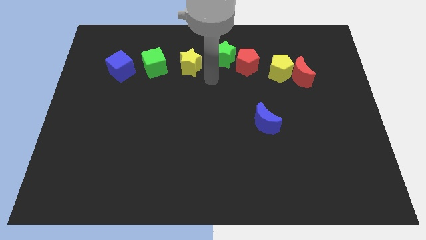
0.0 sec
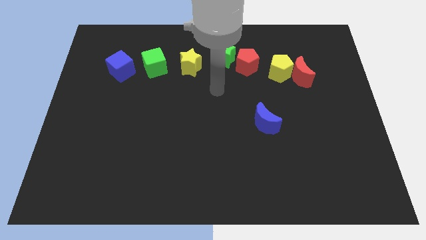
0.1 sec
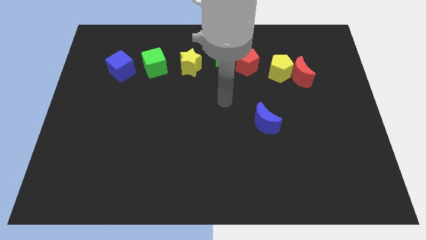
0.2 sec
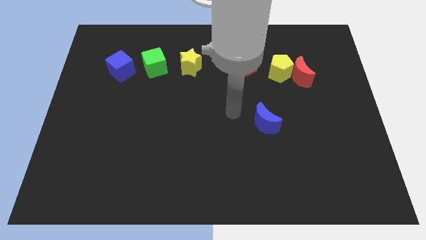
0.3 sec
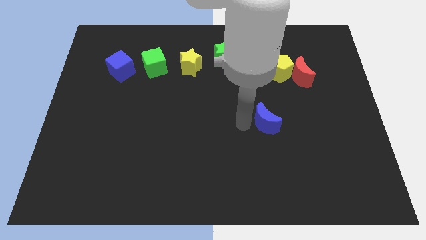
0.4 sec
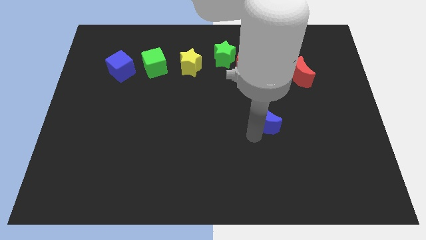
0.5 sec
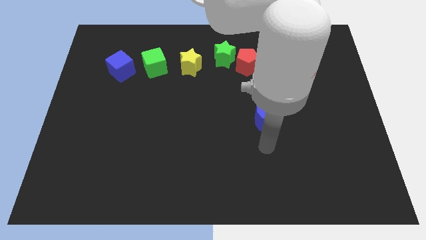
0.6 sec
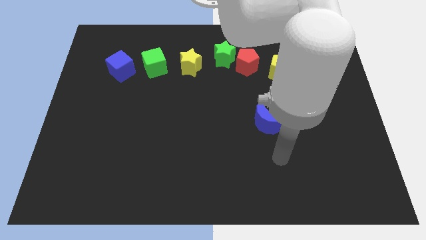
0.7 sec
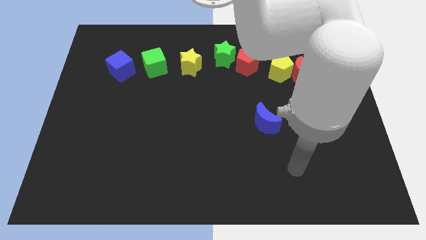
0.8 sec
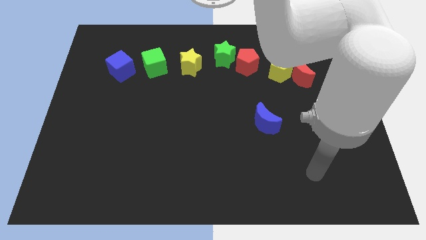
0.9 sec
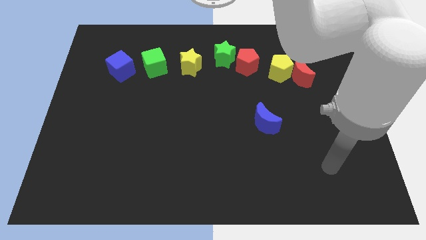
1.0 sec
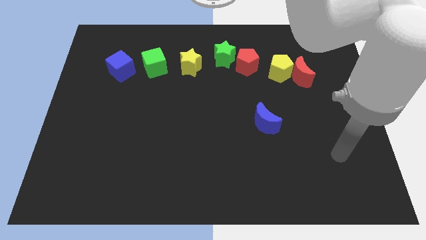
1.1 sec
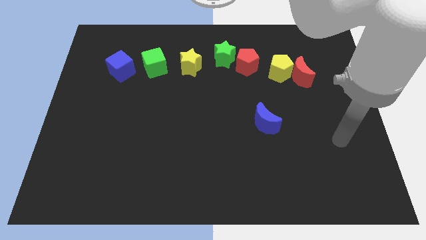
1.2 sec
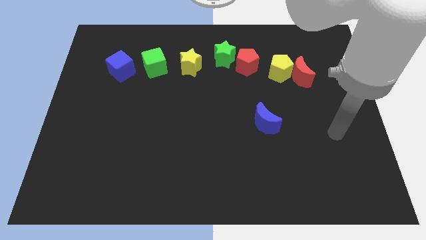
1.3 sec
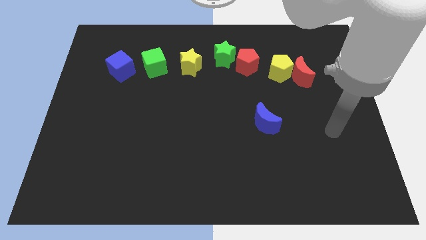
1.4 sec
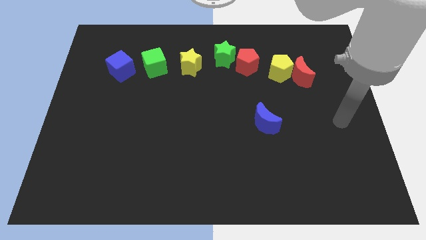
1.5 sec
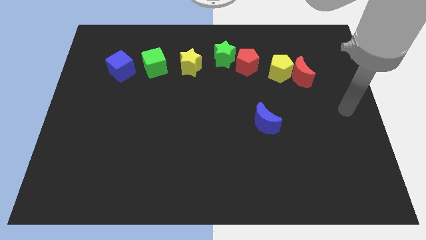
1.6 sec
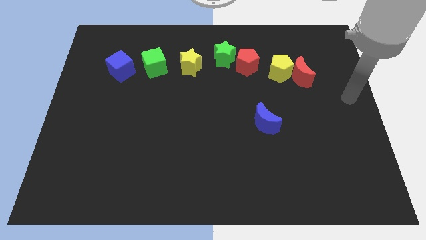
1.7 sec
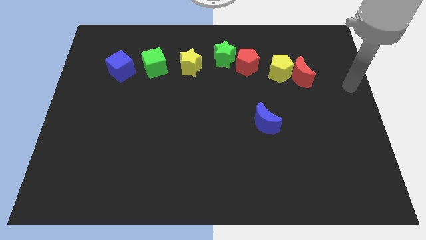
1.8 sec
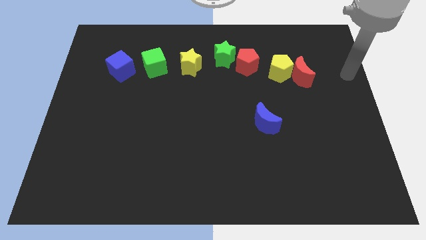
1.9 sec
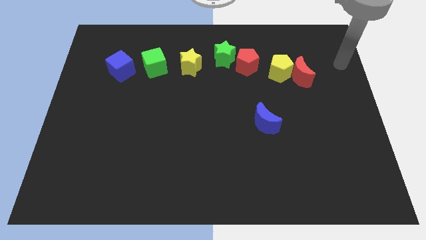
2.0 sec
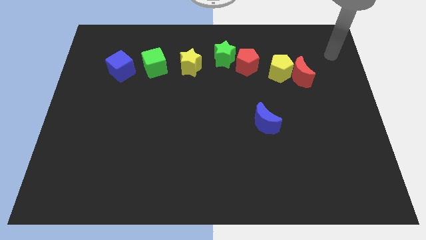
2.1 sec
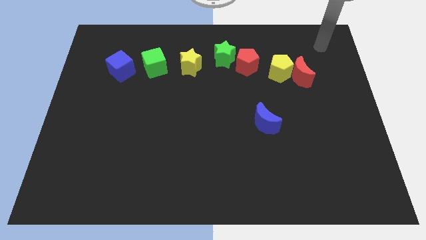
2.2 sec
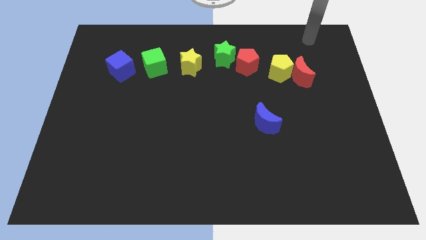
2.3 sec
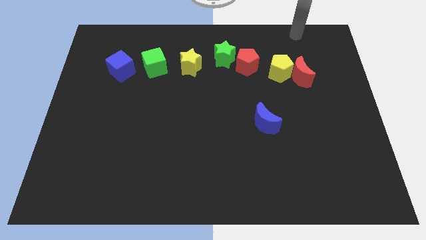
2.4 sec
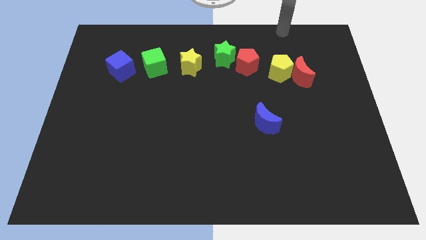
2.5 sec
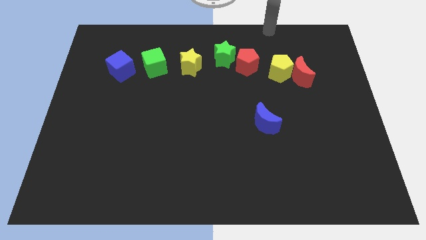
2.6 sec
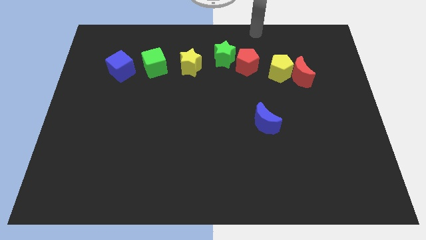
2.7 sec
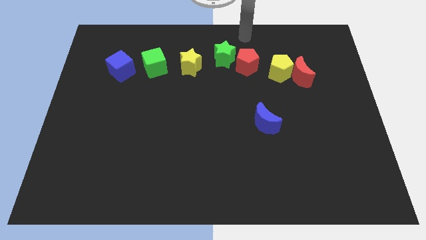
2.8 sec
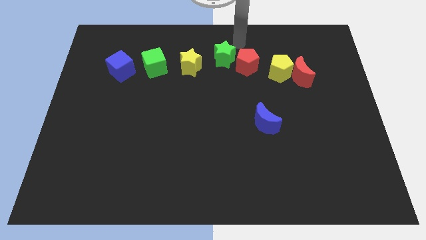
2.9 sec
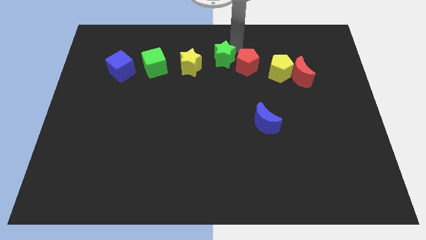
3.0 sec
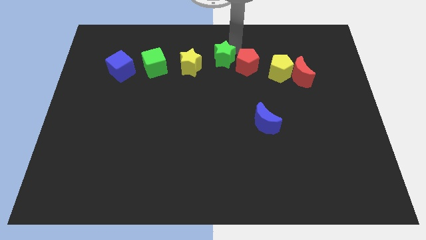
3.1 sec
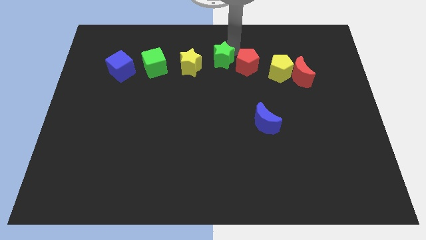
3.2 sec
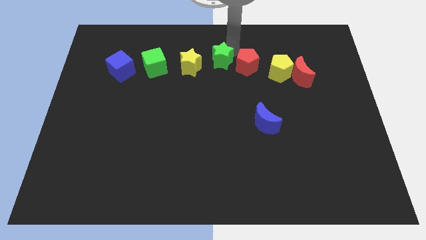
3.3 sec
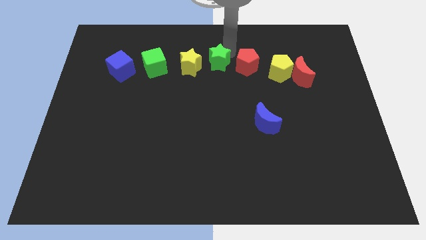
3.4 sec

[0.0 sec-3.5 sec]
slightly push the green star downwards of the board

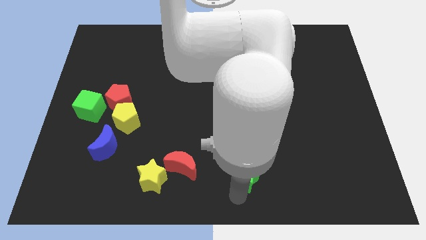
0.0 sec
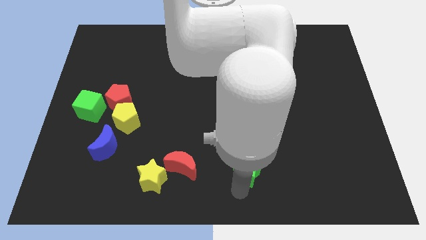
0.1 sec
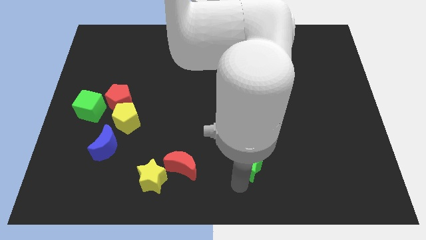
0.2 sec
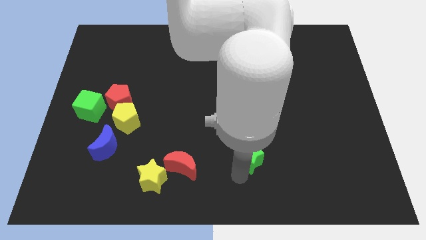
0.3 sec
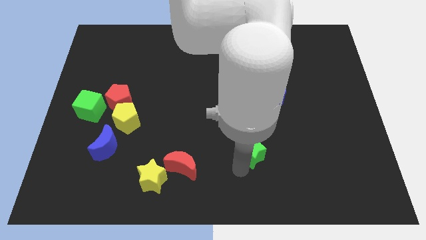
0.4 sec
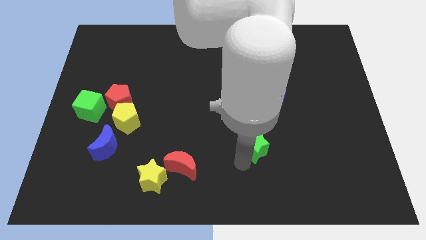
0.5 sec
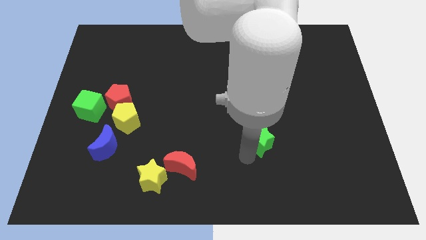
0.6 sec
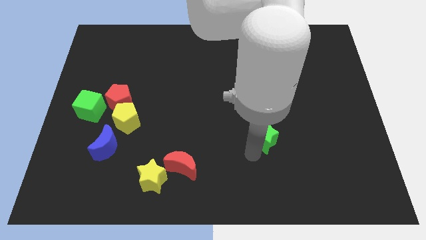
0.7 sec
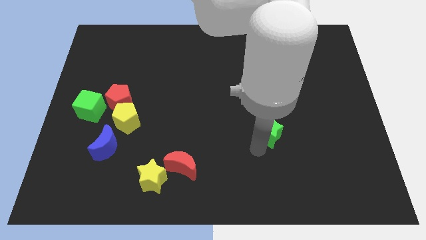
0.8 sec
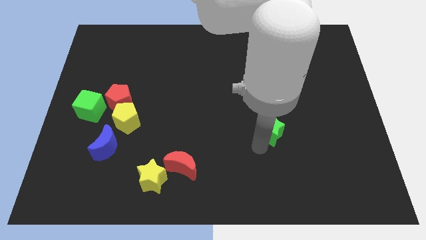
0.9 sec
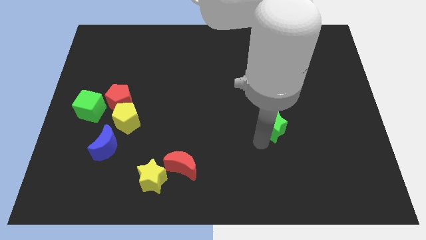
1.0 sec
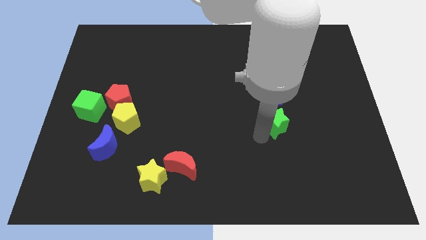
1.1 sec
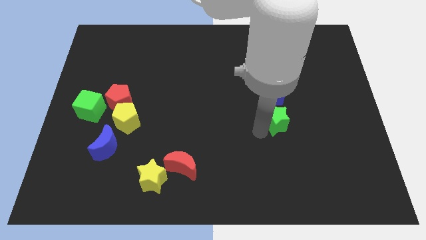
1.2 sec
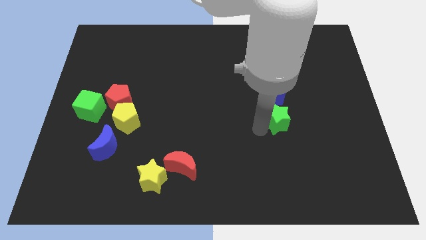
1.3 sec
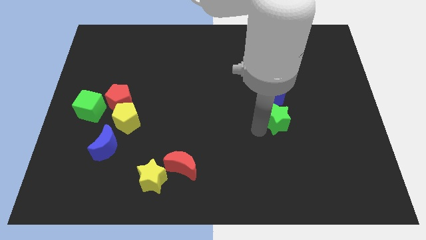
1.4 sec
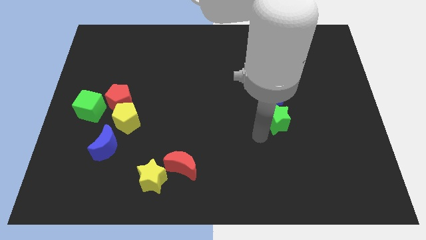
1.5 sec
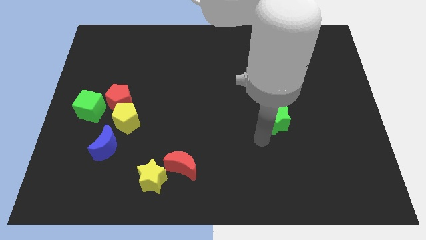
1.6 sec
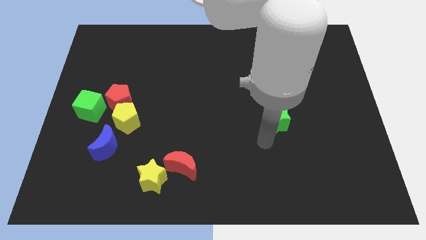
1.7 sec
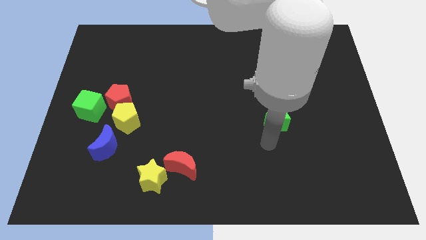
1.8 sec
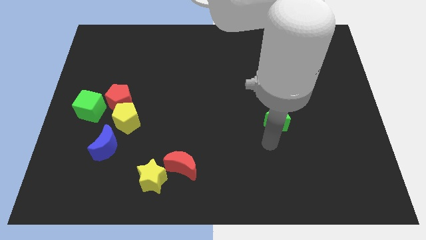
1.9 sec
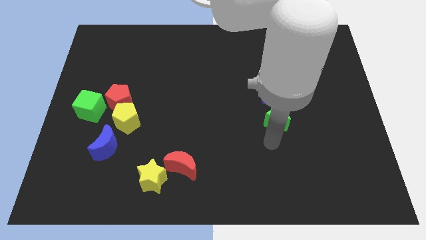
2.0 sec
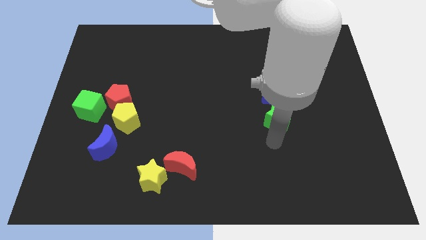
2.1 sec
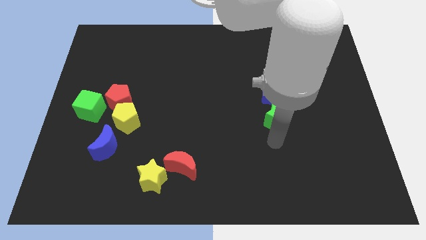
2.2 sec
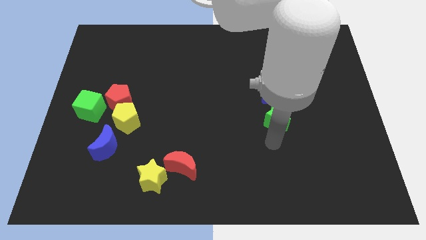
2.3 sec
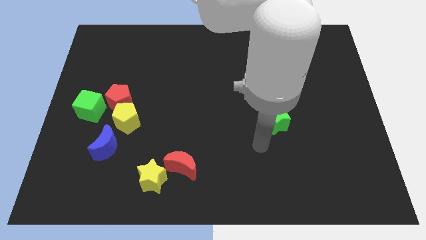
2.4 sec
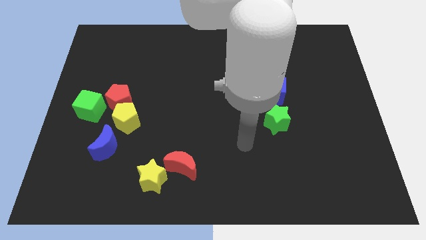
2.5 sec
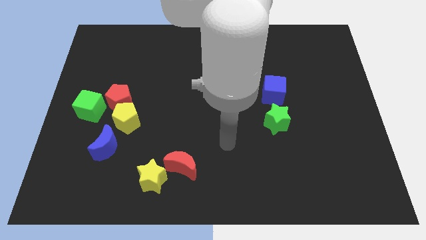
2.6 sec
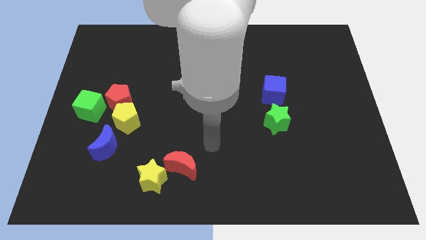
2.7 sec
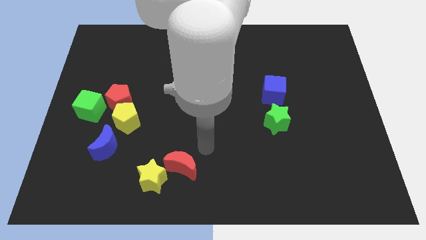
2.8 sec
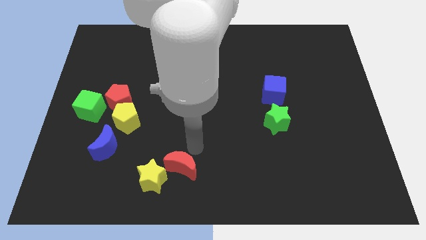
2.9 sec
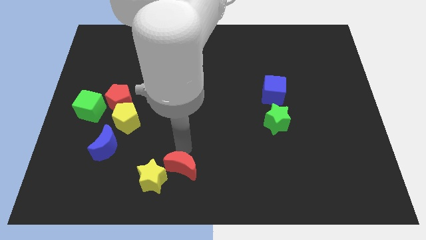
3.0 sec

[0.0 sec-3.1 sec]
place the green star vertically below the blue cube

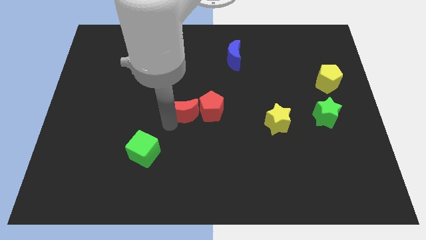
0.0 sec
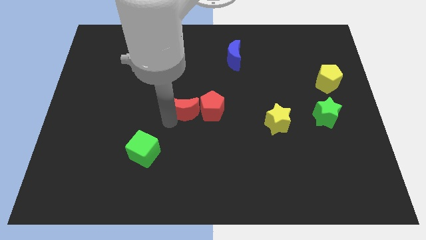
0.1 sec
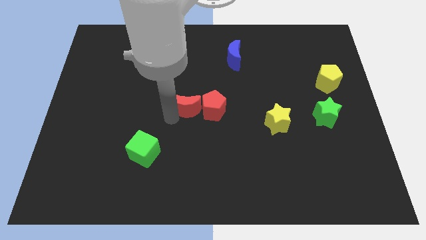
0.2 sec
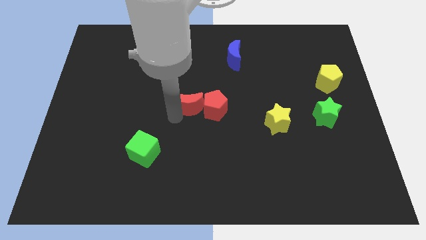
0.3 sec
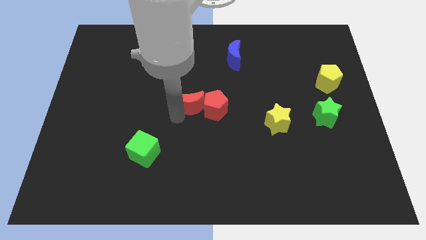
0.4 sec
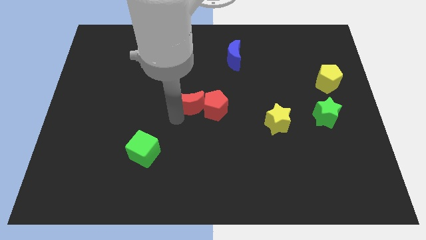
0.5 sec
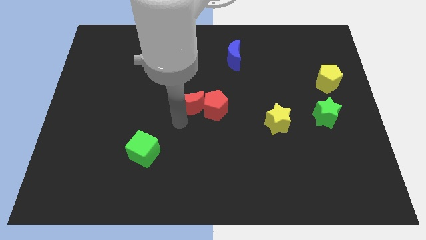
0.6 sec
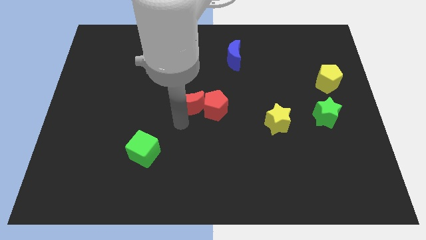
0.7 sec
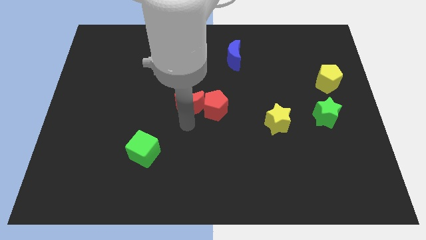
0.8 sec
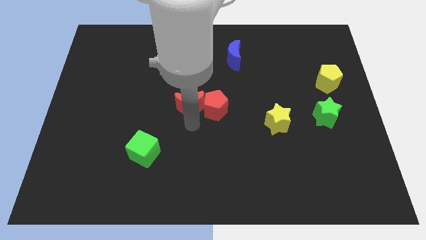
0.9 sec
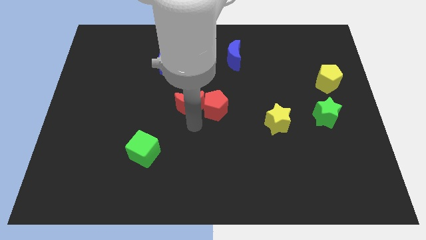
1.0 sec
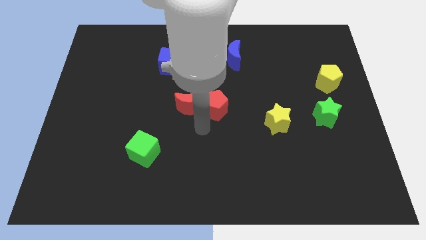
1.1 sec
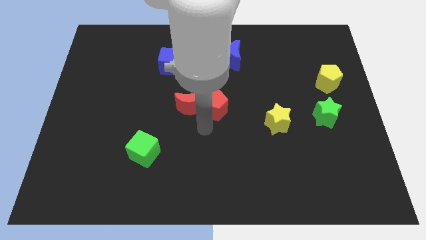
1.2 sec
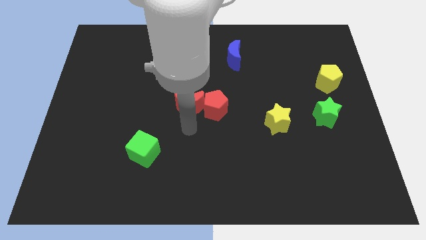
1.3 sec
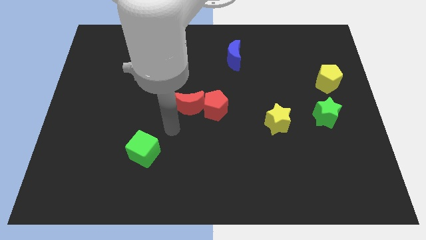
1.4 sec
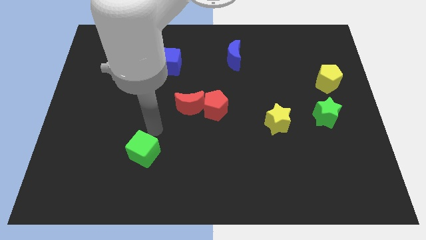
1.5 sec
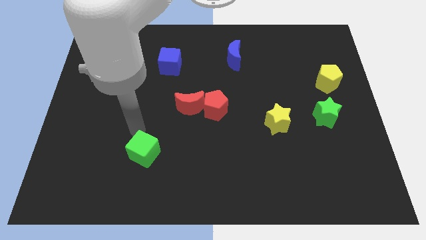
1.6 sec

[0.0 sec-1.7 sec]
push the red blocks towards the center of the board

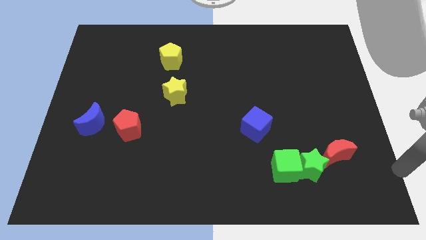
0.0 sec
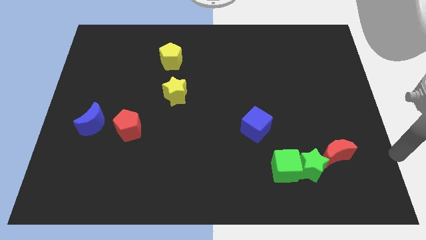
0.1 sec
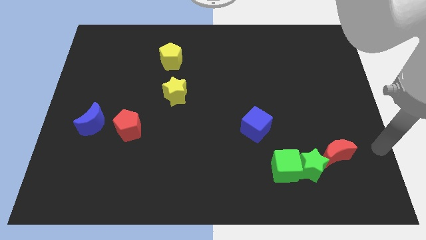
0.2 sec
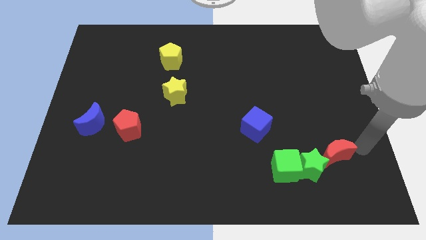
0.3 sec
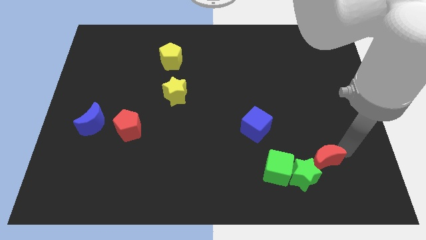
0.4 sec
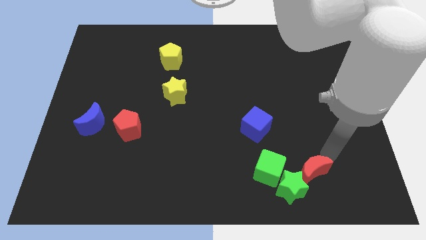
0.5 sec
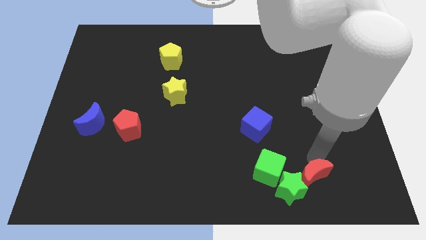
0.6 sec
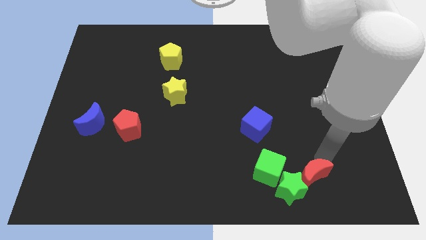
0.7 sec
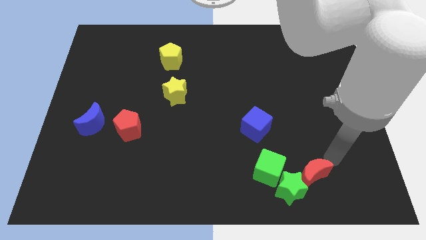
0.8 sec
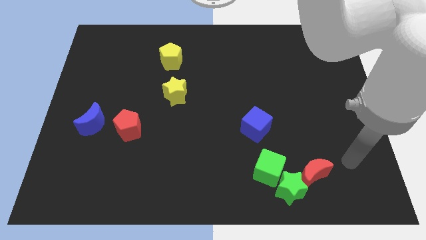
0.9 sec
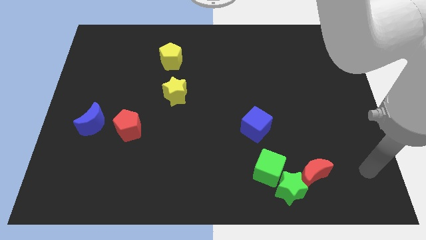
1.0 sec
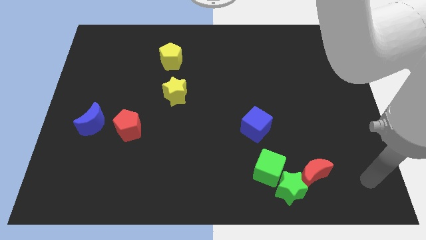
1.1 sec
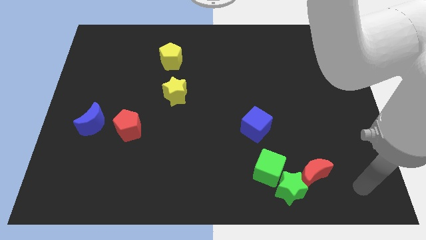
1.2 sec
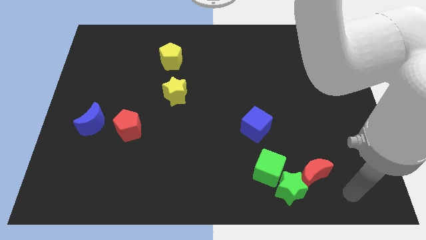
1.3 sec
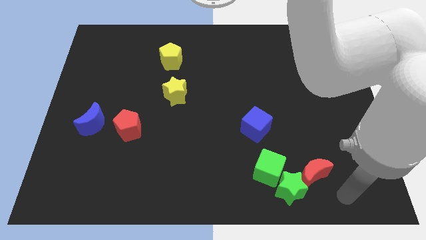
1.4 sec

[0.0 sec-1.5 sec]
push the red crescent along with green cube and green star to the bottom
